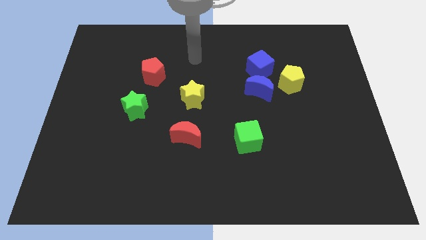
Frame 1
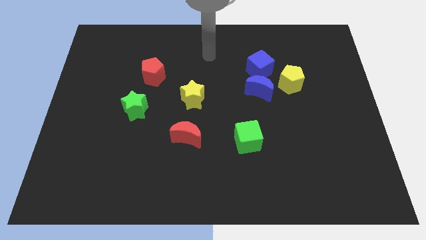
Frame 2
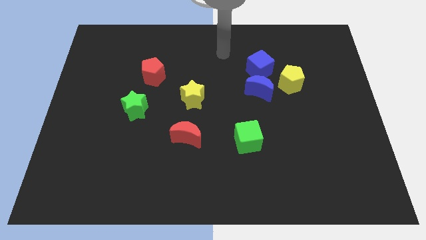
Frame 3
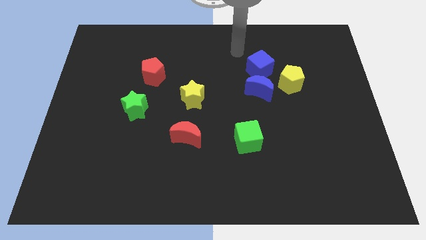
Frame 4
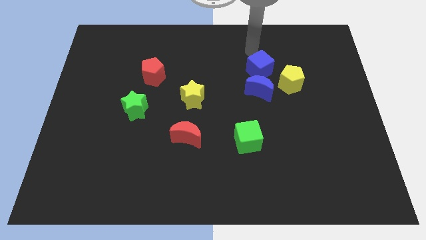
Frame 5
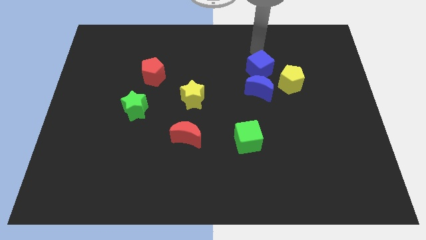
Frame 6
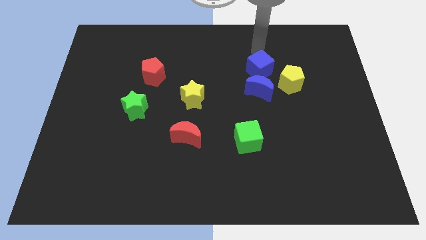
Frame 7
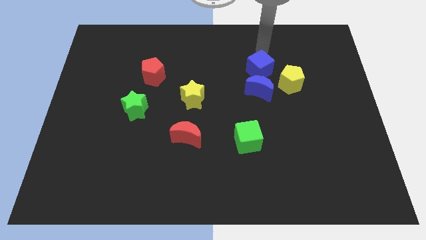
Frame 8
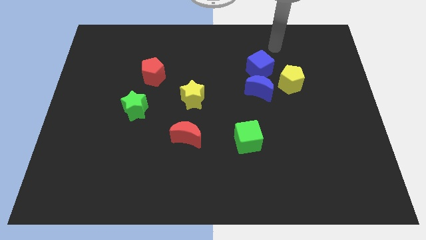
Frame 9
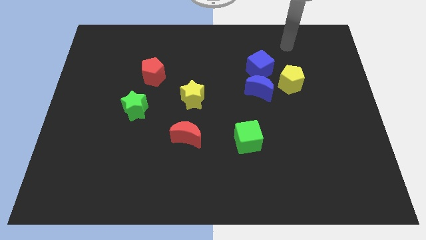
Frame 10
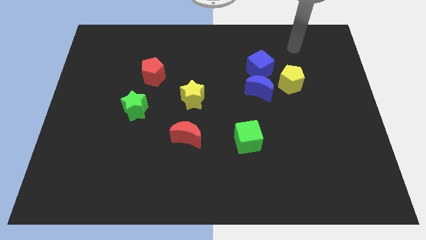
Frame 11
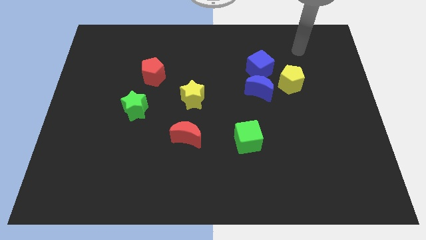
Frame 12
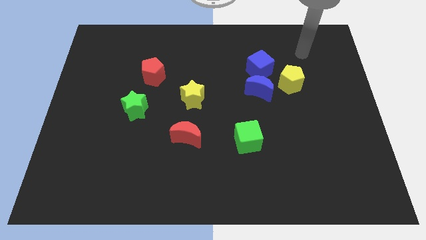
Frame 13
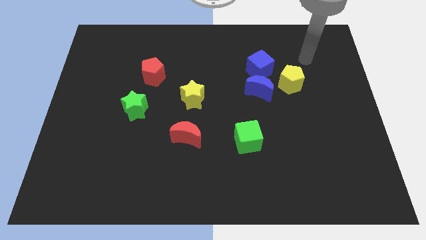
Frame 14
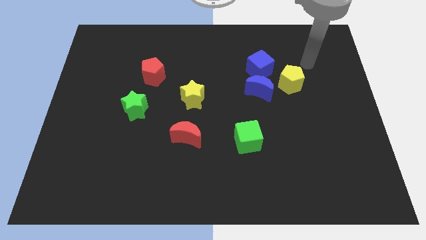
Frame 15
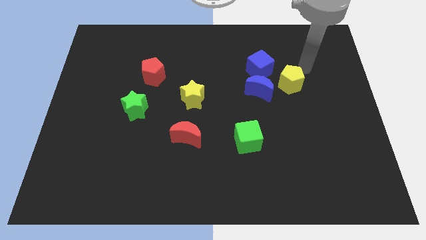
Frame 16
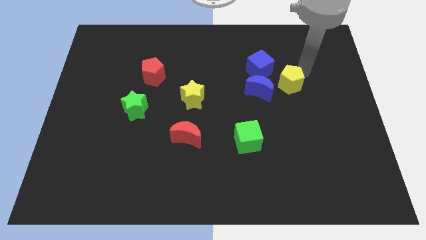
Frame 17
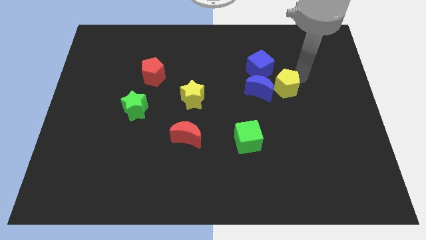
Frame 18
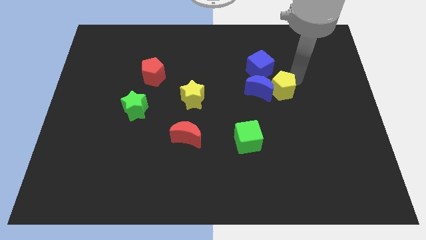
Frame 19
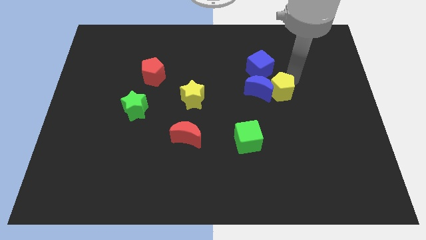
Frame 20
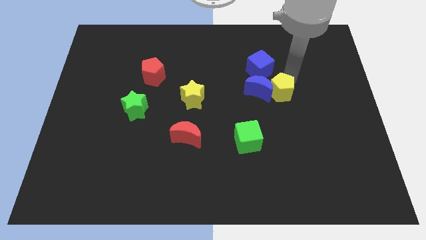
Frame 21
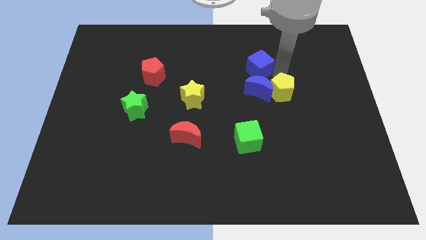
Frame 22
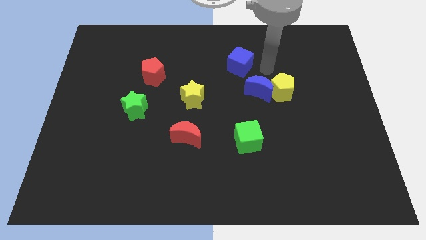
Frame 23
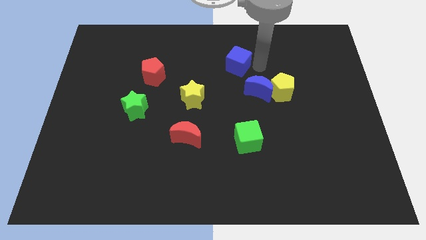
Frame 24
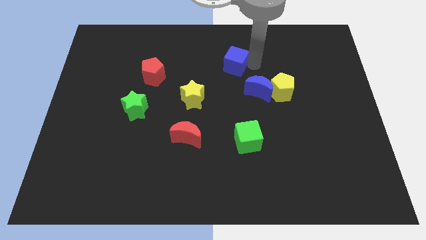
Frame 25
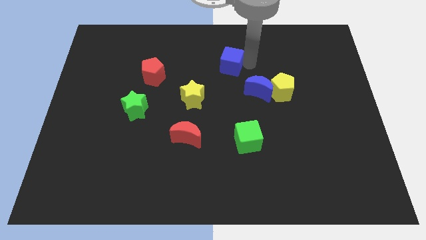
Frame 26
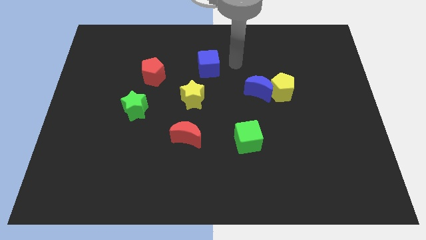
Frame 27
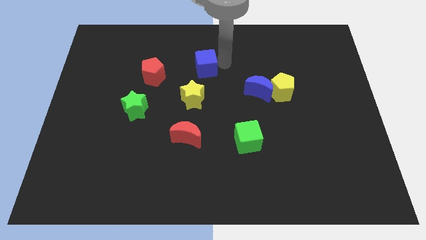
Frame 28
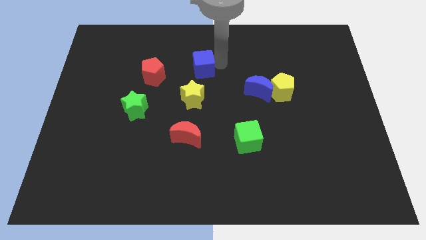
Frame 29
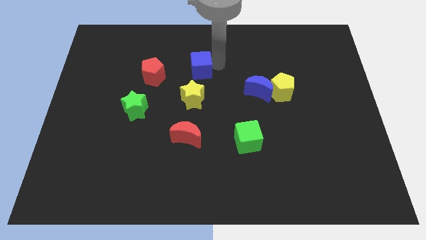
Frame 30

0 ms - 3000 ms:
place blue cube above yellow star

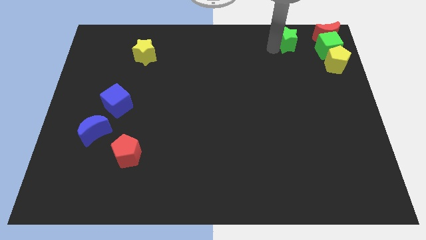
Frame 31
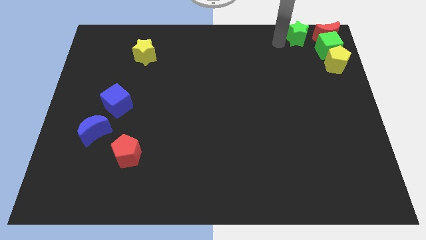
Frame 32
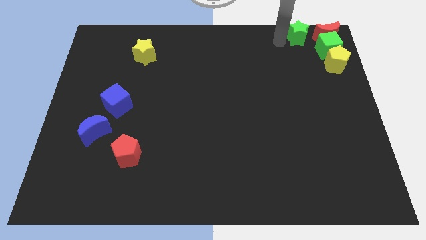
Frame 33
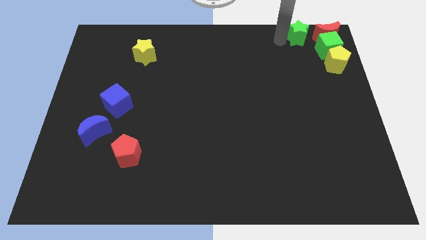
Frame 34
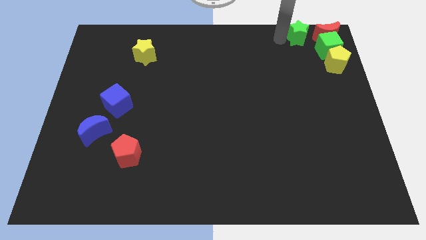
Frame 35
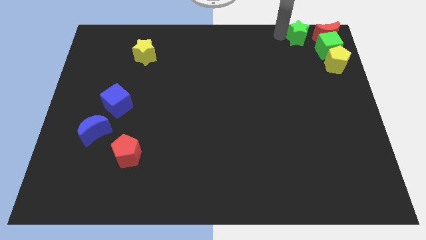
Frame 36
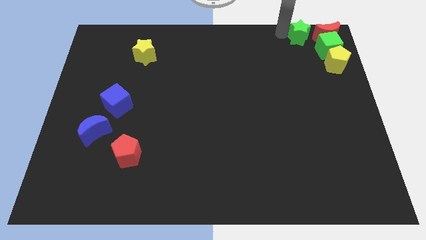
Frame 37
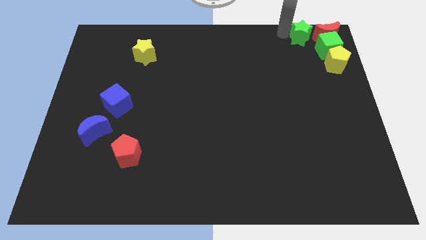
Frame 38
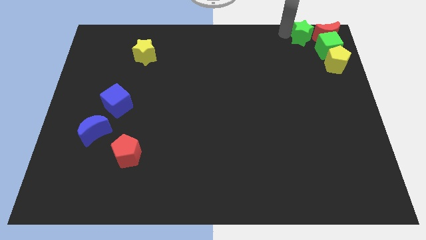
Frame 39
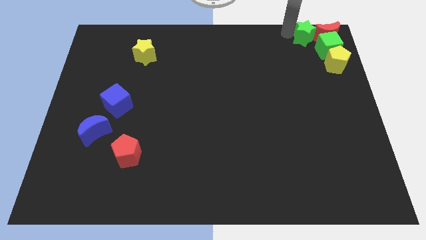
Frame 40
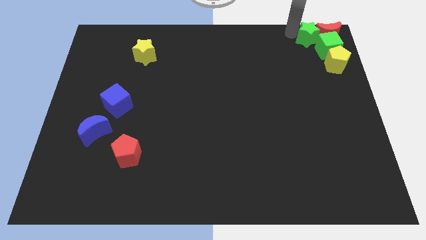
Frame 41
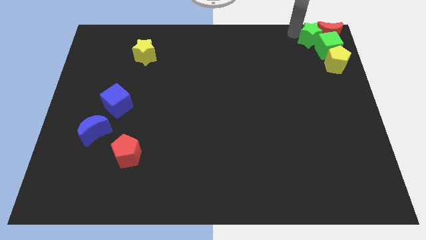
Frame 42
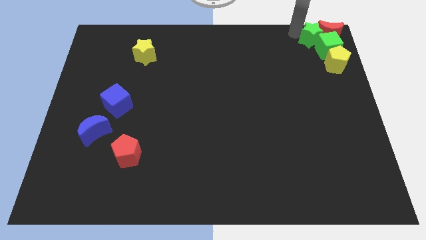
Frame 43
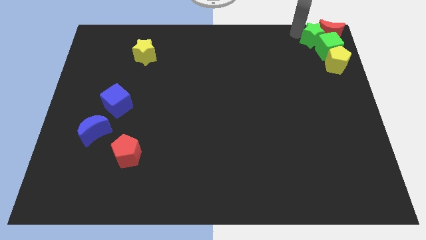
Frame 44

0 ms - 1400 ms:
move the green star into the red crescent

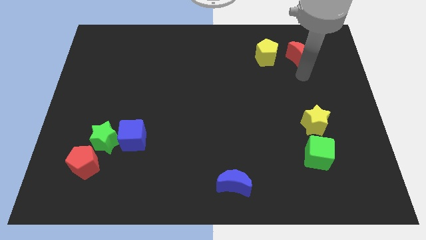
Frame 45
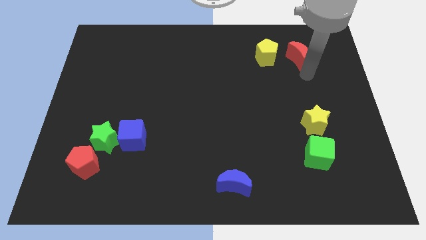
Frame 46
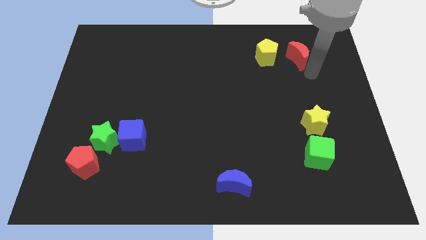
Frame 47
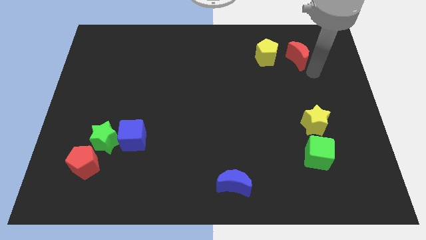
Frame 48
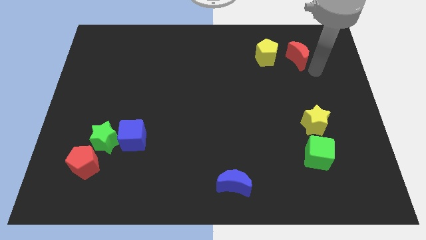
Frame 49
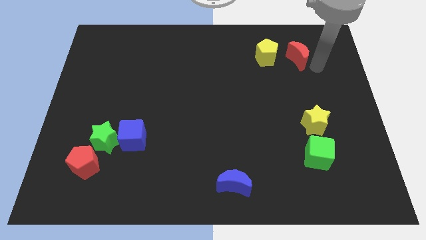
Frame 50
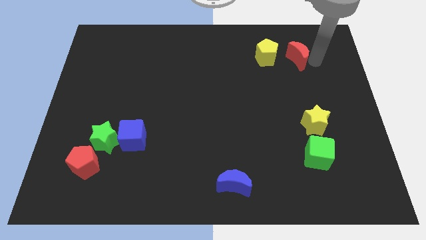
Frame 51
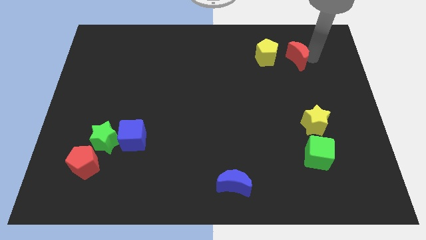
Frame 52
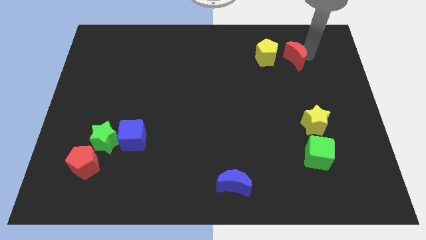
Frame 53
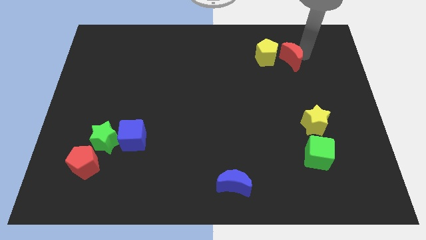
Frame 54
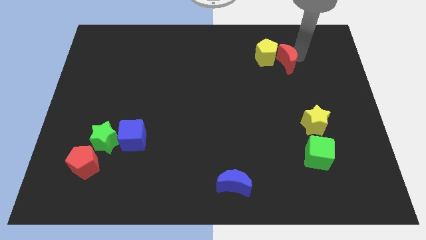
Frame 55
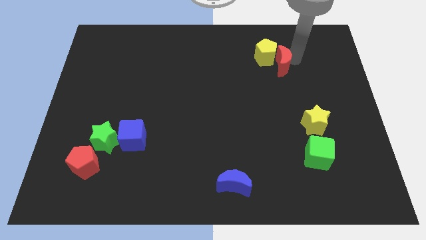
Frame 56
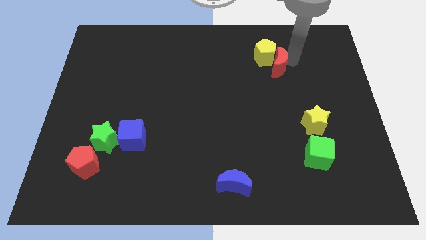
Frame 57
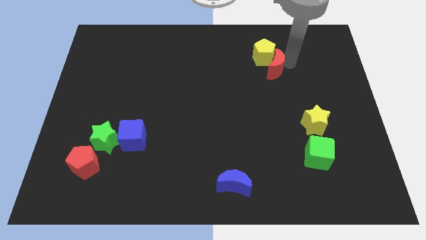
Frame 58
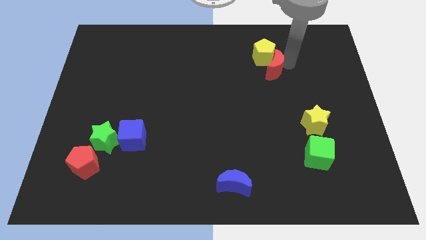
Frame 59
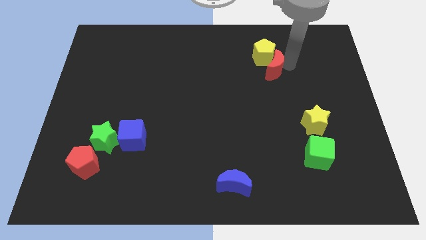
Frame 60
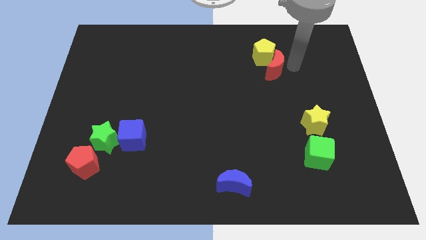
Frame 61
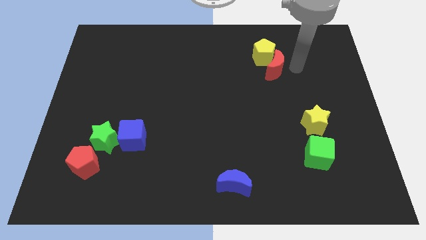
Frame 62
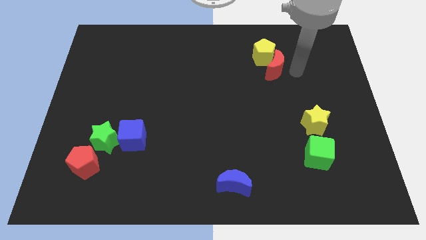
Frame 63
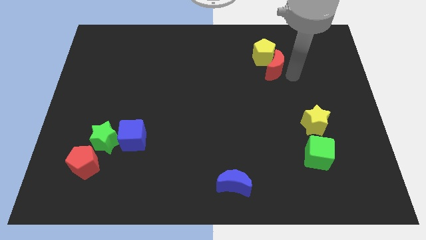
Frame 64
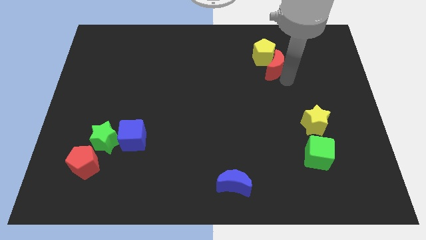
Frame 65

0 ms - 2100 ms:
push the red moon into the yellow pentagon

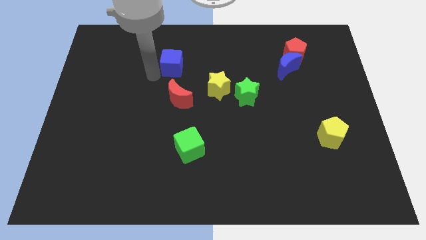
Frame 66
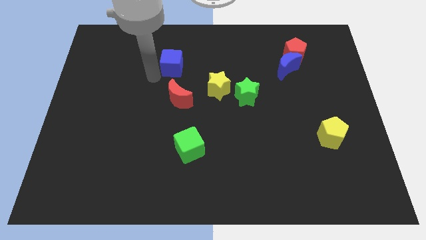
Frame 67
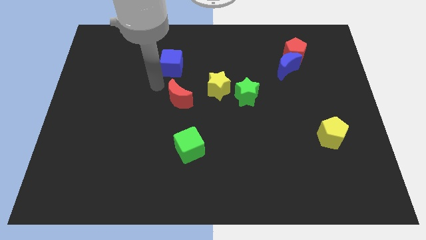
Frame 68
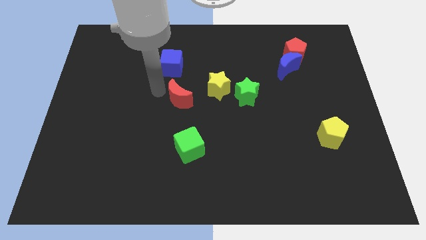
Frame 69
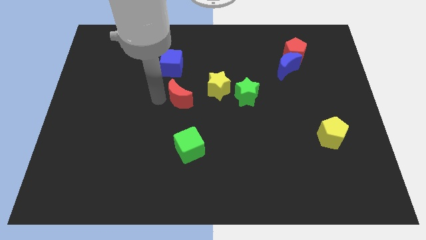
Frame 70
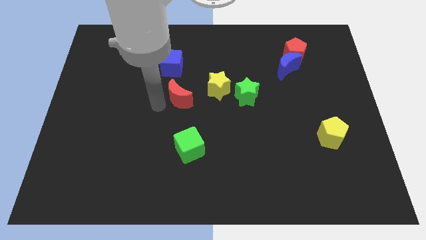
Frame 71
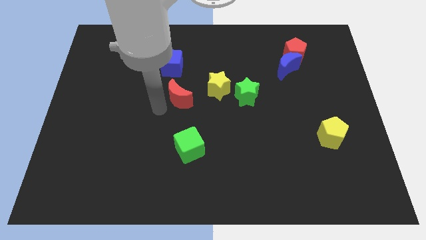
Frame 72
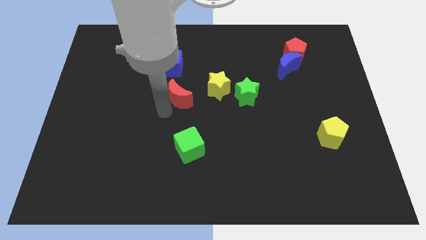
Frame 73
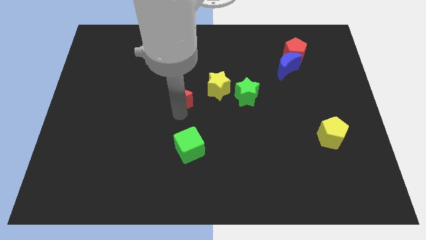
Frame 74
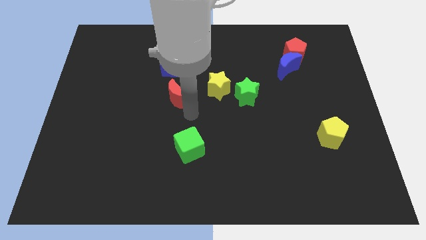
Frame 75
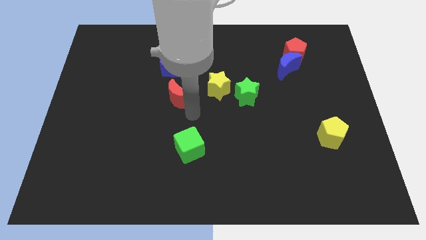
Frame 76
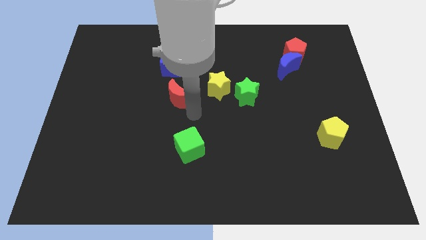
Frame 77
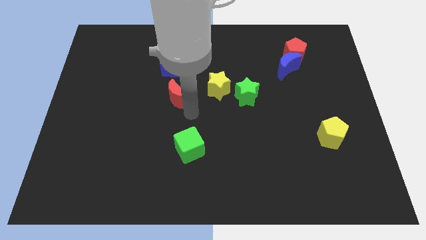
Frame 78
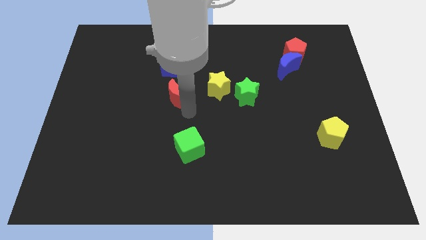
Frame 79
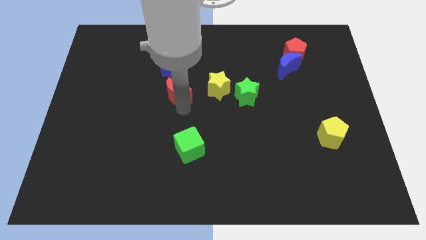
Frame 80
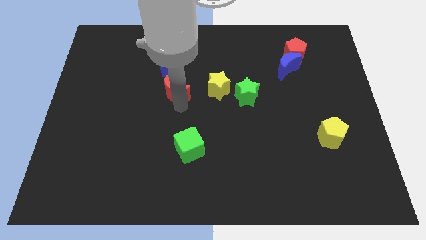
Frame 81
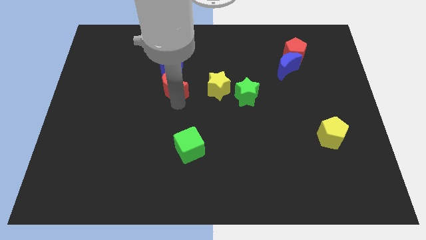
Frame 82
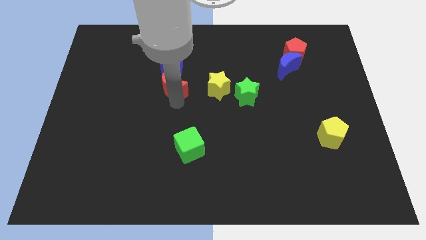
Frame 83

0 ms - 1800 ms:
slide the red moon towards the bottom side of the blue cube

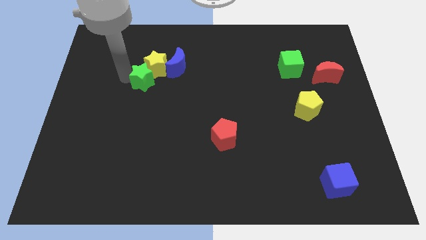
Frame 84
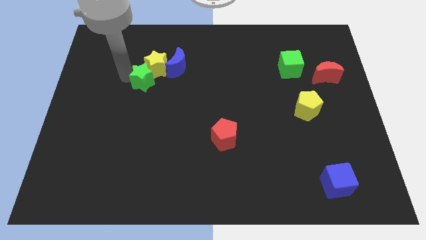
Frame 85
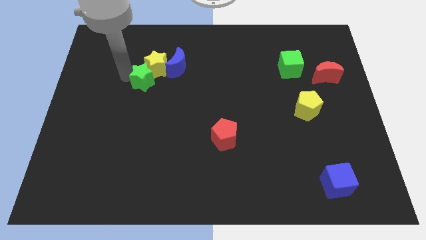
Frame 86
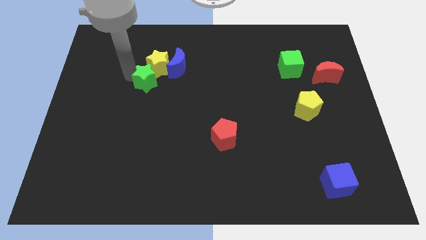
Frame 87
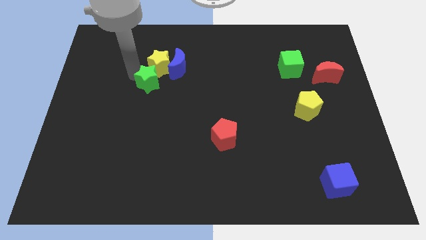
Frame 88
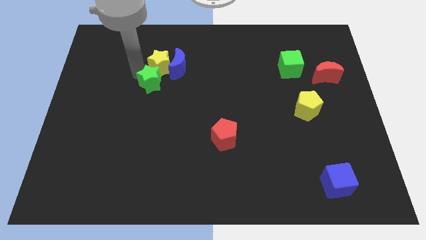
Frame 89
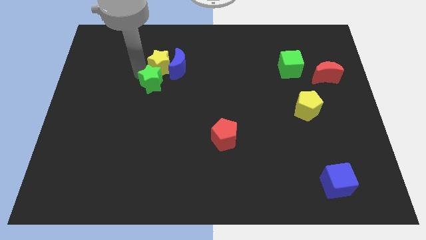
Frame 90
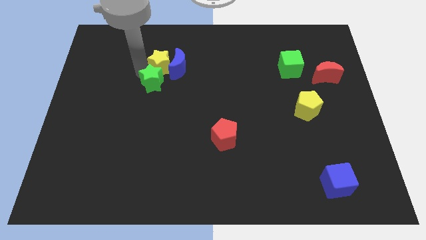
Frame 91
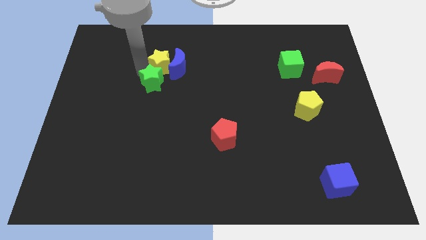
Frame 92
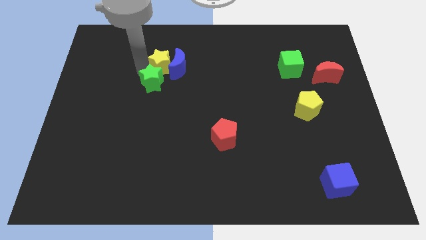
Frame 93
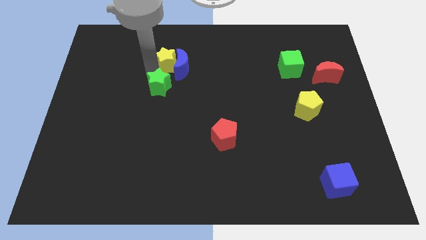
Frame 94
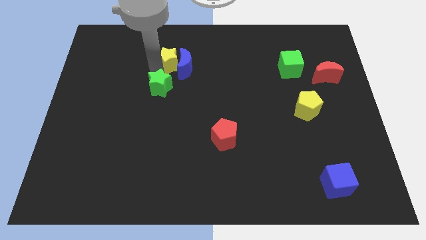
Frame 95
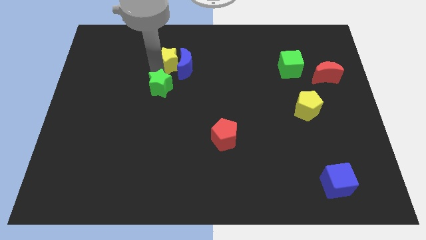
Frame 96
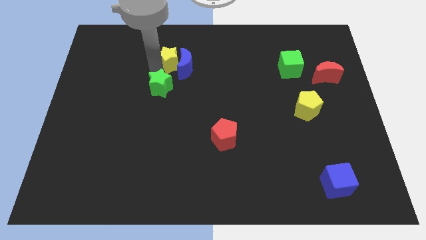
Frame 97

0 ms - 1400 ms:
separate the green star and yellow star
